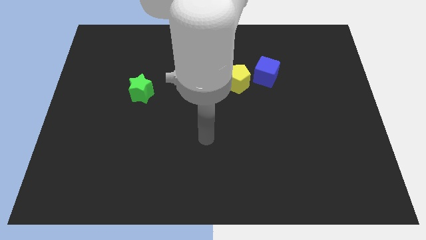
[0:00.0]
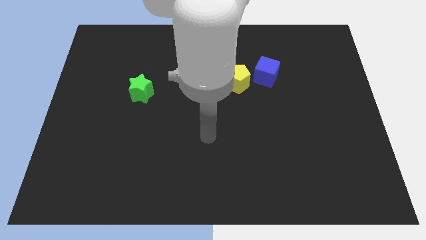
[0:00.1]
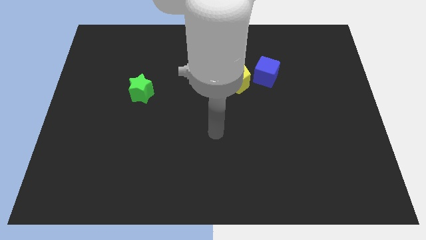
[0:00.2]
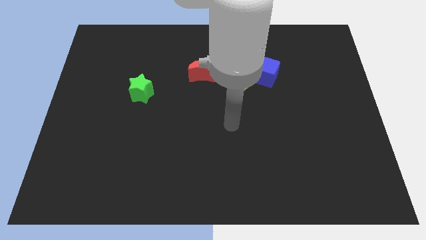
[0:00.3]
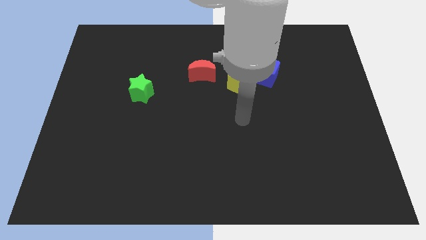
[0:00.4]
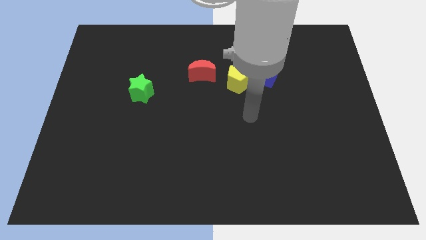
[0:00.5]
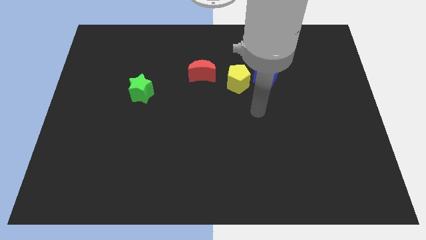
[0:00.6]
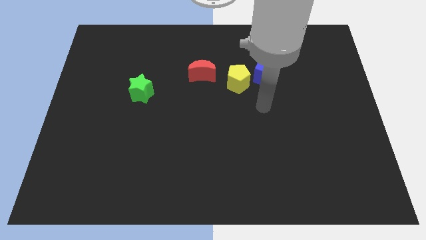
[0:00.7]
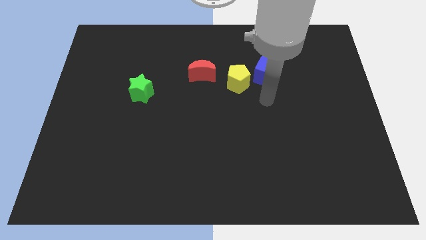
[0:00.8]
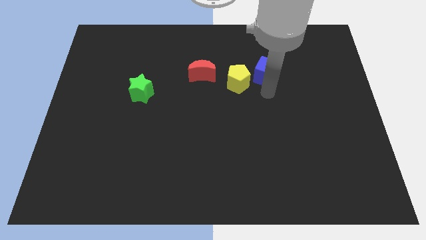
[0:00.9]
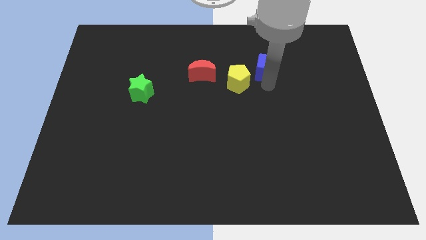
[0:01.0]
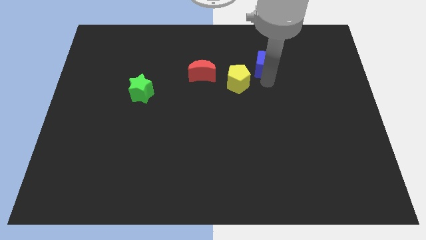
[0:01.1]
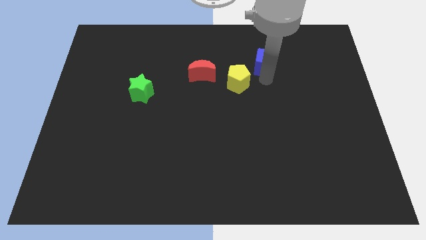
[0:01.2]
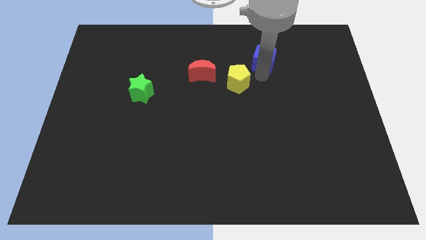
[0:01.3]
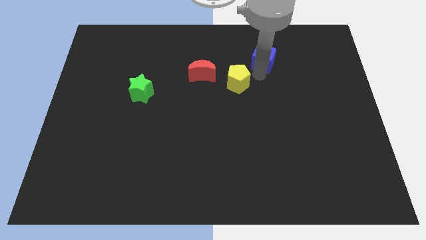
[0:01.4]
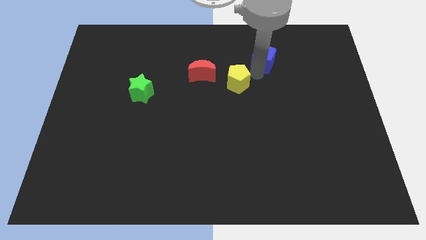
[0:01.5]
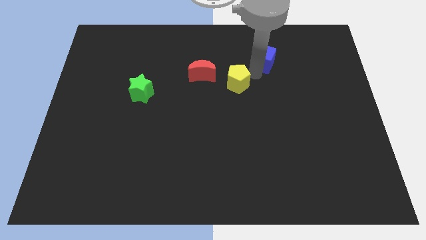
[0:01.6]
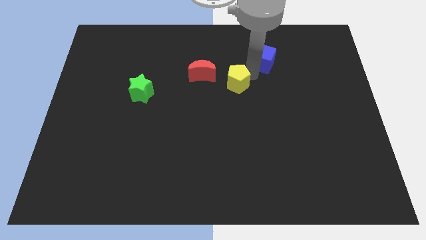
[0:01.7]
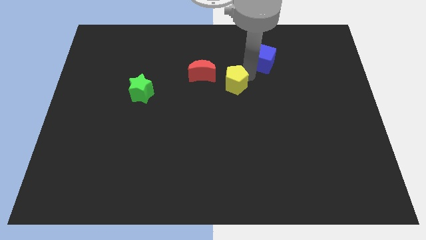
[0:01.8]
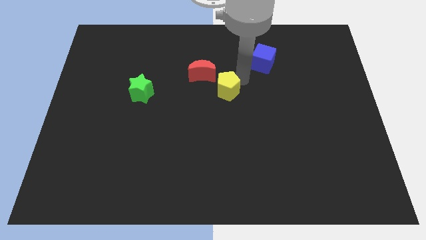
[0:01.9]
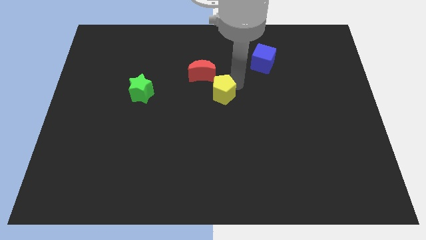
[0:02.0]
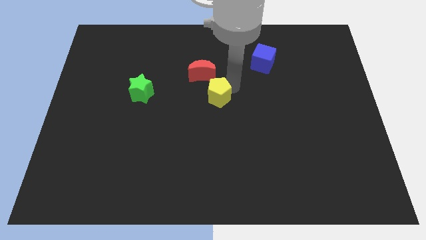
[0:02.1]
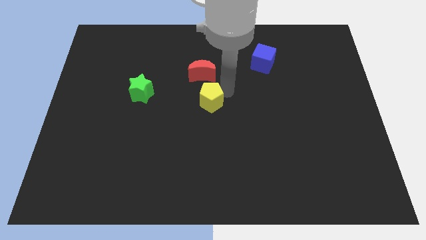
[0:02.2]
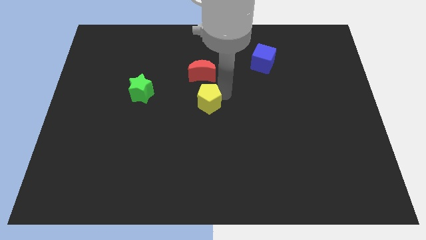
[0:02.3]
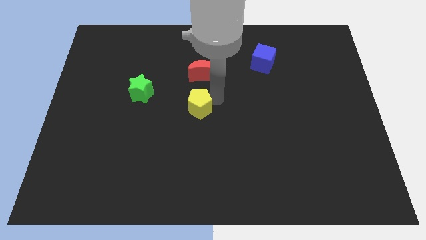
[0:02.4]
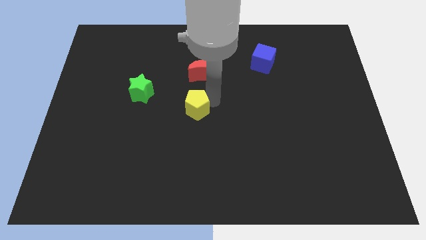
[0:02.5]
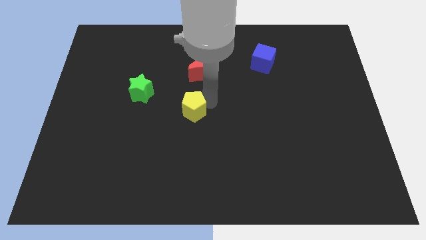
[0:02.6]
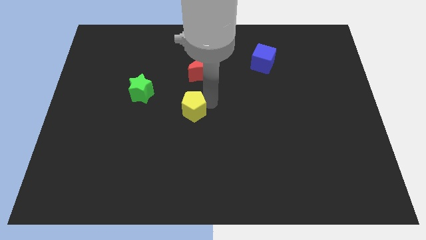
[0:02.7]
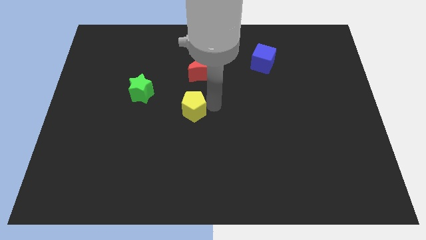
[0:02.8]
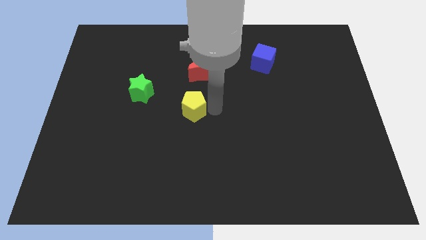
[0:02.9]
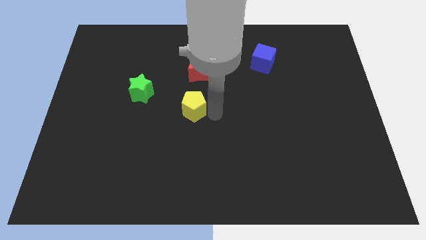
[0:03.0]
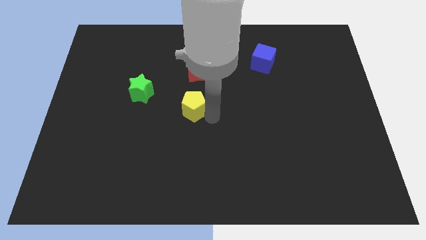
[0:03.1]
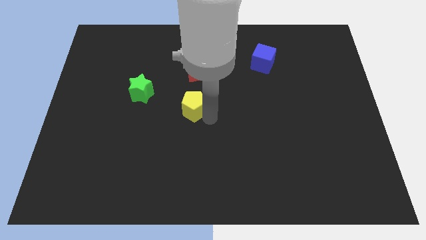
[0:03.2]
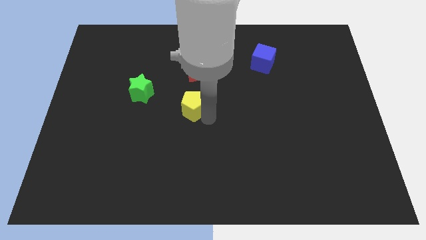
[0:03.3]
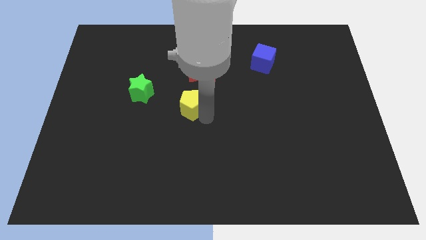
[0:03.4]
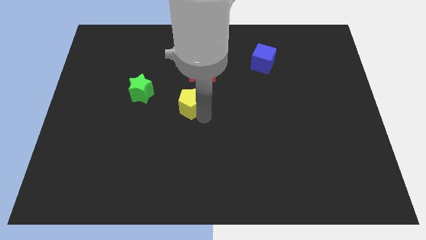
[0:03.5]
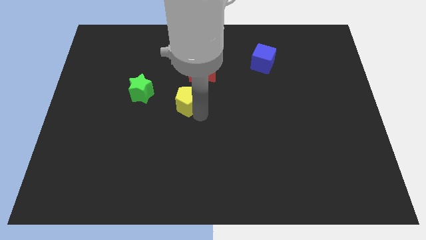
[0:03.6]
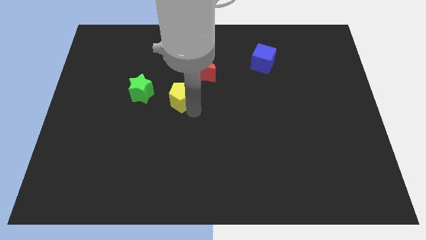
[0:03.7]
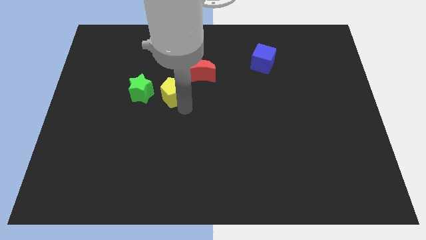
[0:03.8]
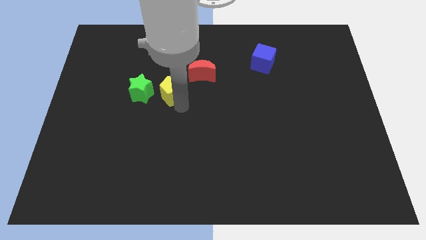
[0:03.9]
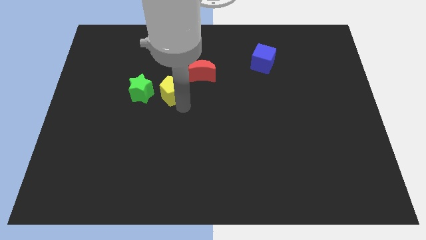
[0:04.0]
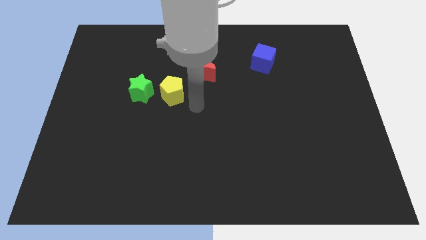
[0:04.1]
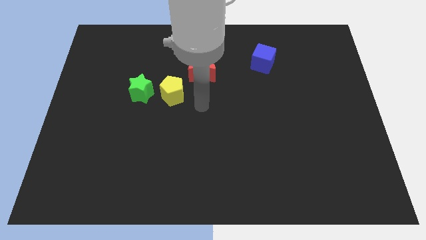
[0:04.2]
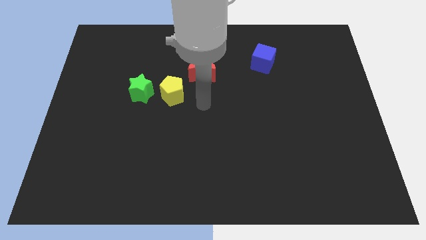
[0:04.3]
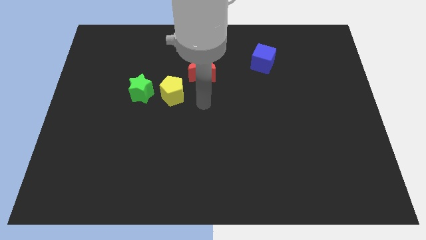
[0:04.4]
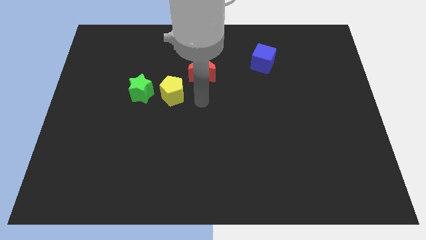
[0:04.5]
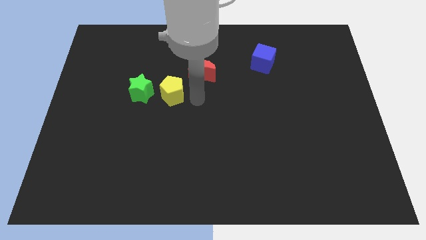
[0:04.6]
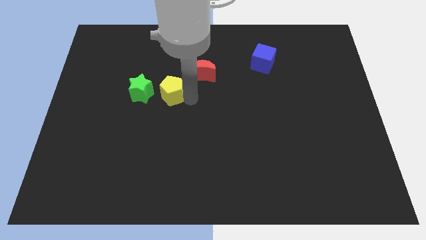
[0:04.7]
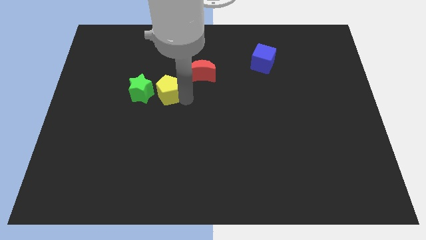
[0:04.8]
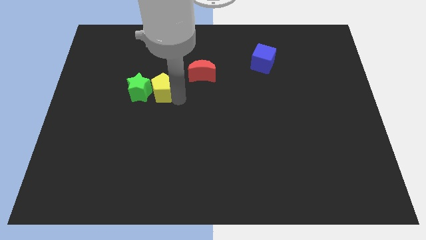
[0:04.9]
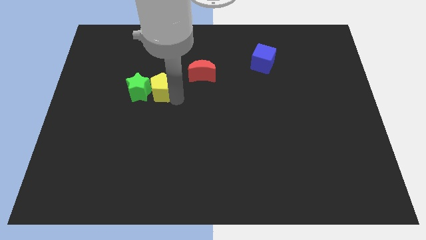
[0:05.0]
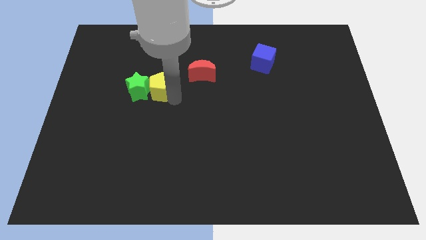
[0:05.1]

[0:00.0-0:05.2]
move the yellow block close to the green block

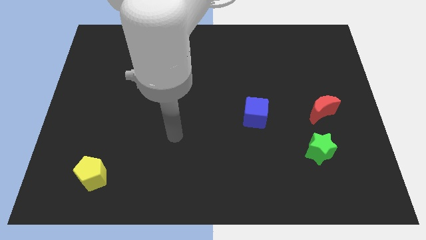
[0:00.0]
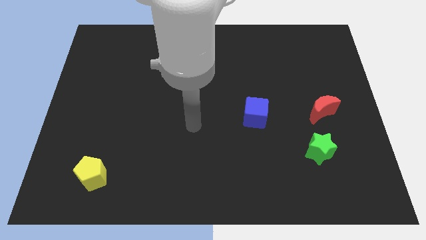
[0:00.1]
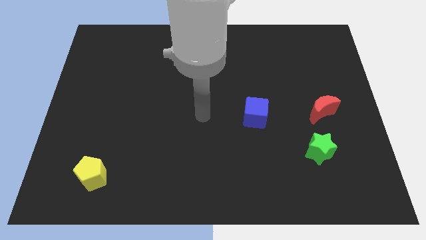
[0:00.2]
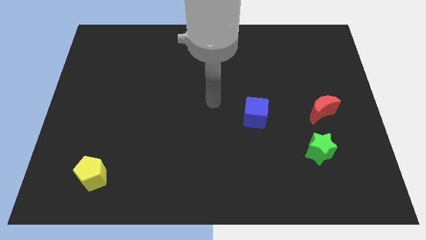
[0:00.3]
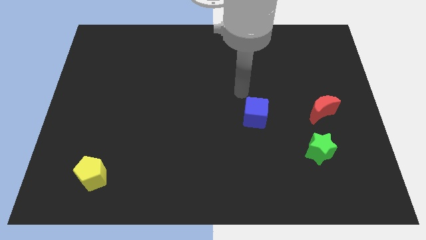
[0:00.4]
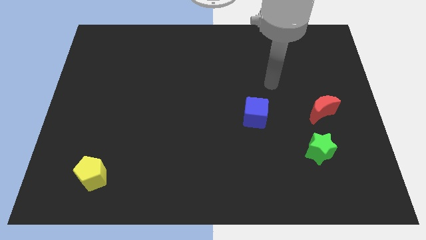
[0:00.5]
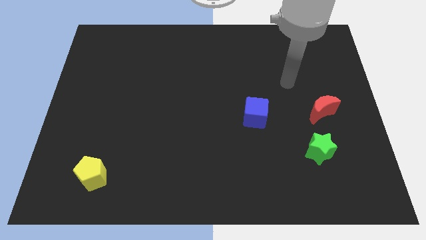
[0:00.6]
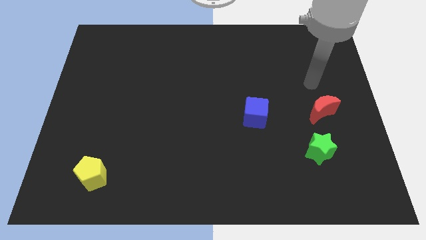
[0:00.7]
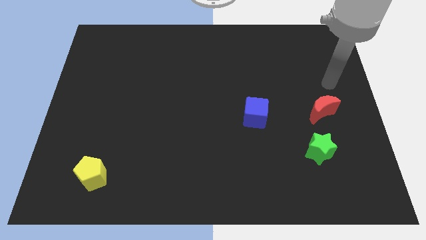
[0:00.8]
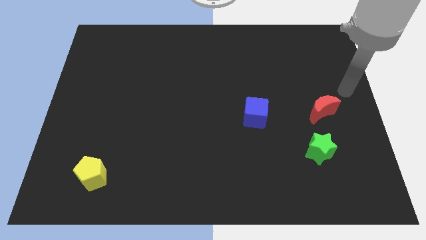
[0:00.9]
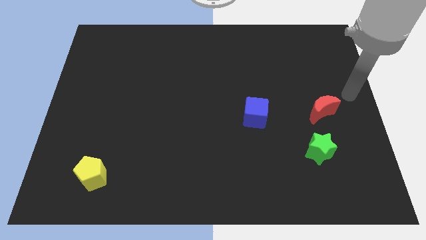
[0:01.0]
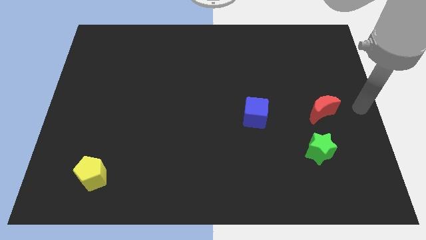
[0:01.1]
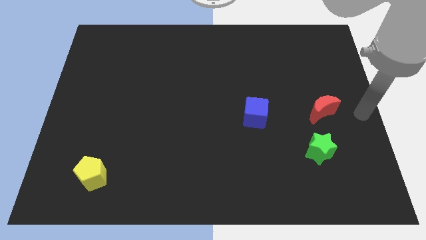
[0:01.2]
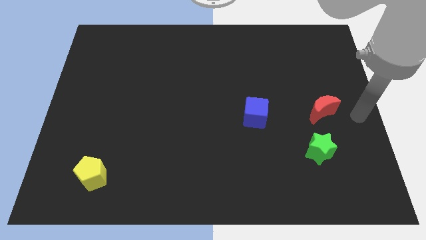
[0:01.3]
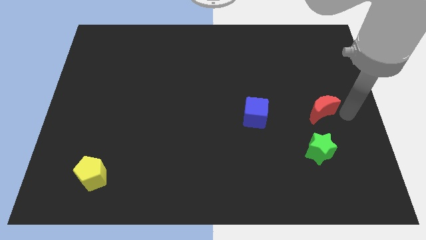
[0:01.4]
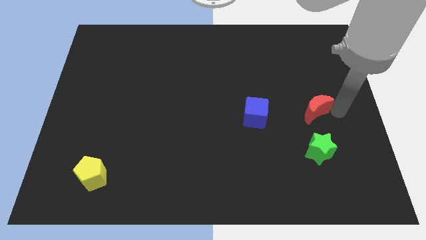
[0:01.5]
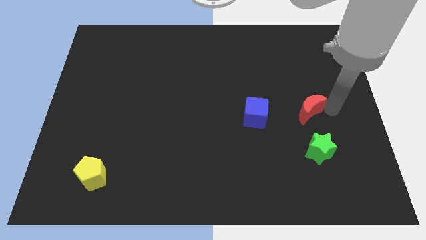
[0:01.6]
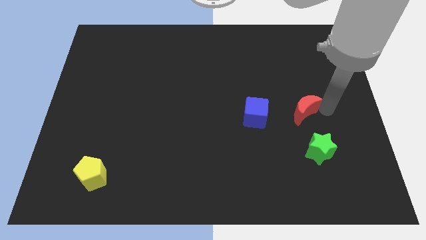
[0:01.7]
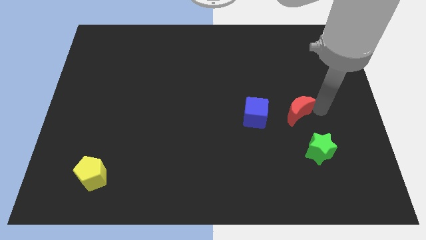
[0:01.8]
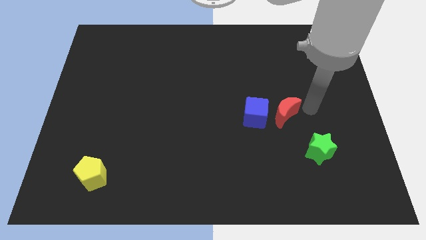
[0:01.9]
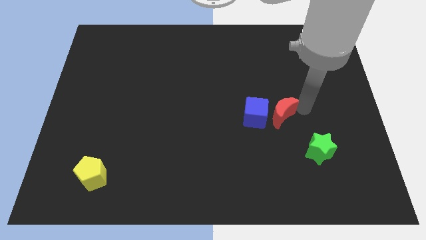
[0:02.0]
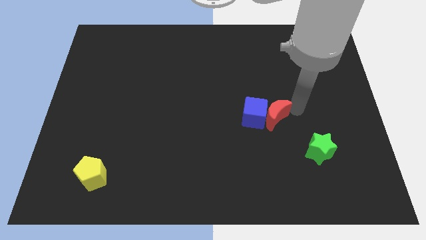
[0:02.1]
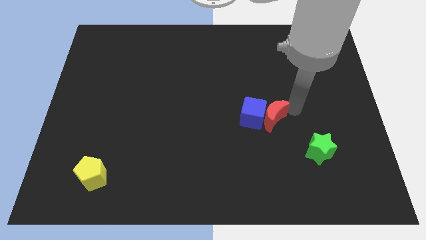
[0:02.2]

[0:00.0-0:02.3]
push the red block close to the blue block

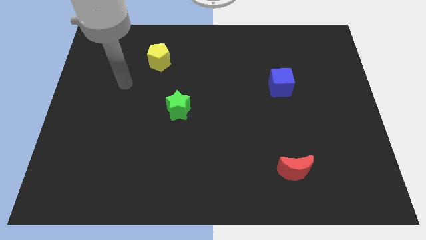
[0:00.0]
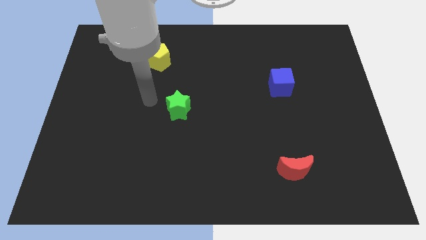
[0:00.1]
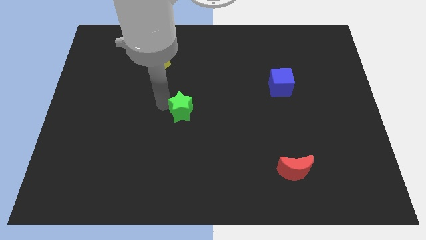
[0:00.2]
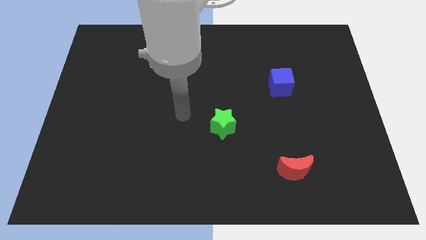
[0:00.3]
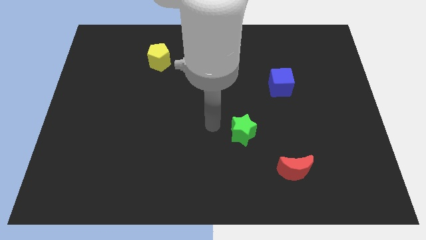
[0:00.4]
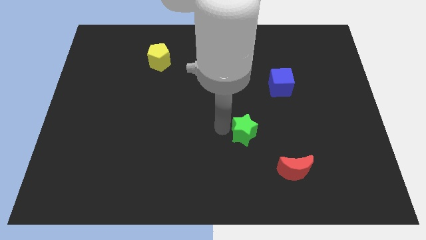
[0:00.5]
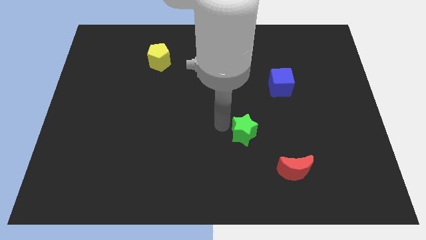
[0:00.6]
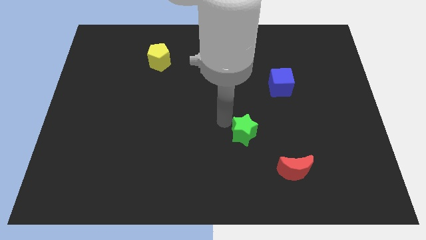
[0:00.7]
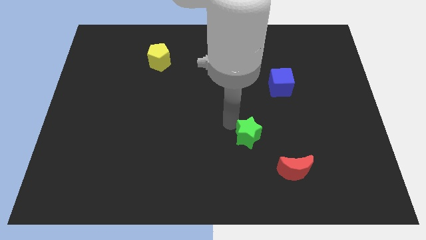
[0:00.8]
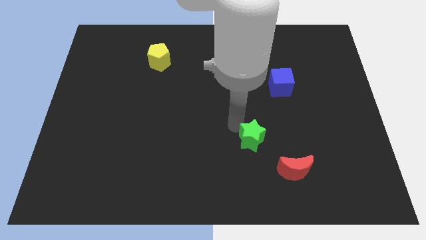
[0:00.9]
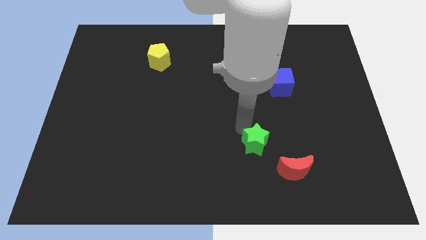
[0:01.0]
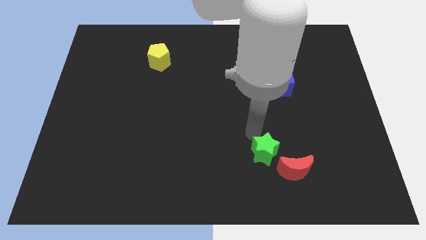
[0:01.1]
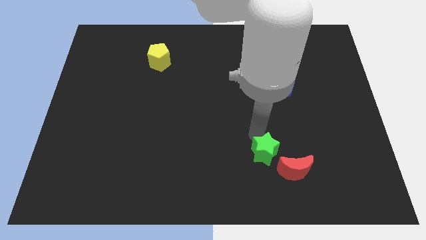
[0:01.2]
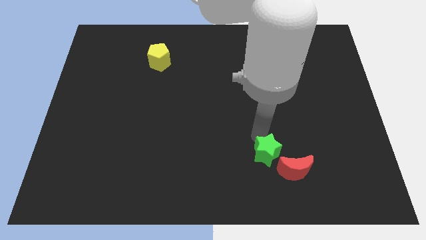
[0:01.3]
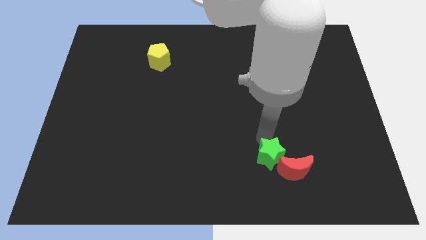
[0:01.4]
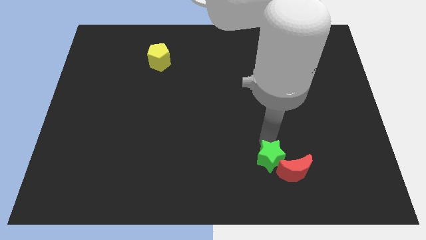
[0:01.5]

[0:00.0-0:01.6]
move the star to the red moon

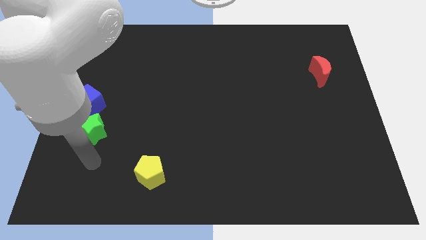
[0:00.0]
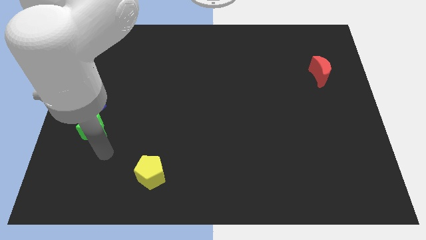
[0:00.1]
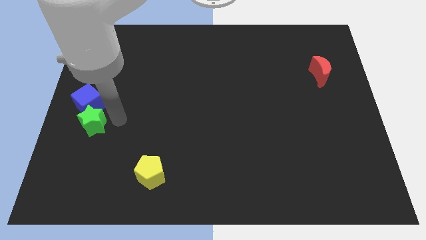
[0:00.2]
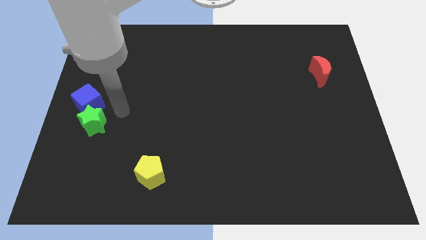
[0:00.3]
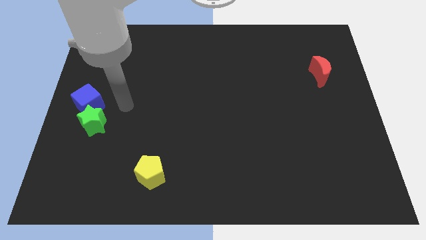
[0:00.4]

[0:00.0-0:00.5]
move the blue block towards the green block
